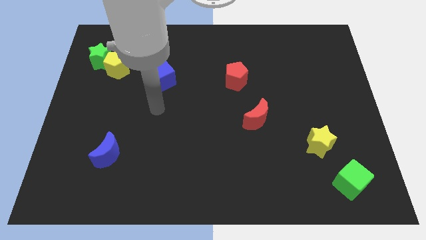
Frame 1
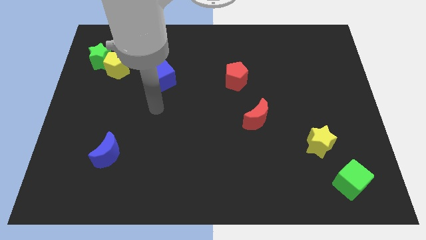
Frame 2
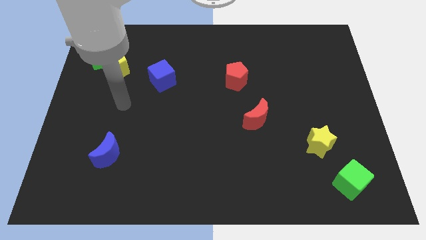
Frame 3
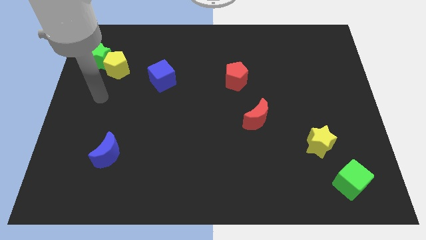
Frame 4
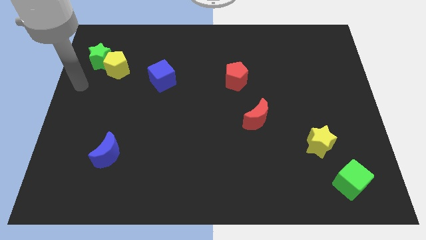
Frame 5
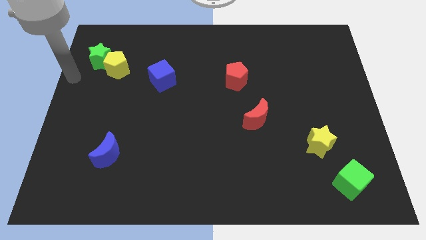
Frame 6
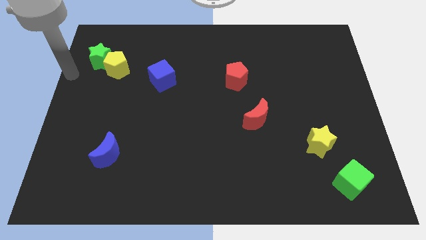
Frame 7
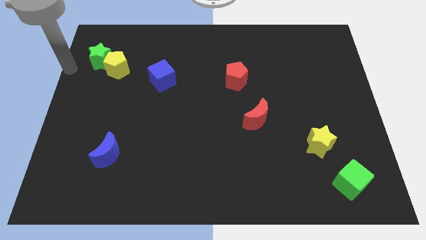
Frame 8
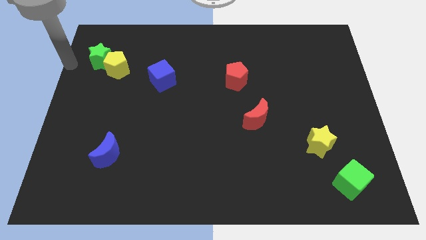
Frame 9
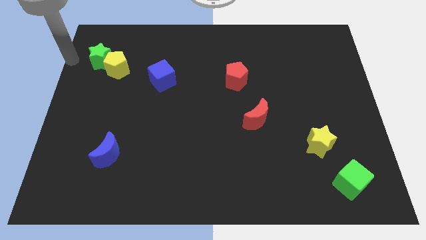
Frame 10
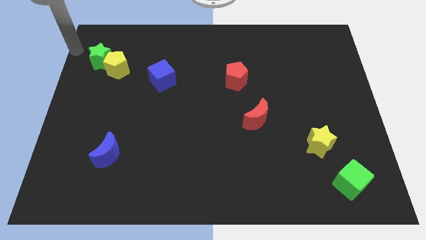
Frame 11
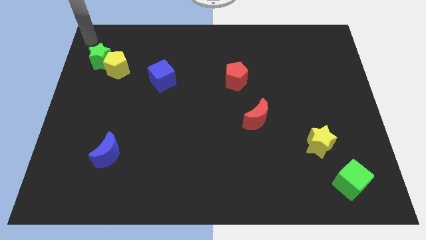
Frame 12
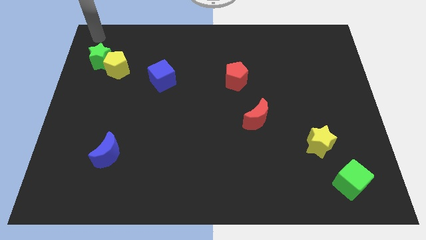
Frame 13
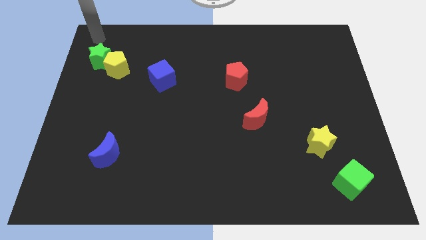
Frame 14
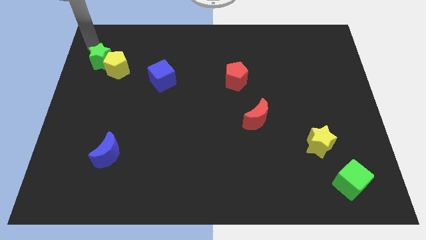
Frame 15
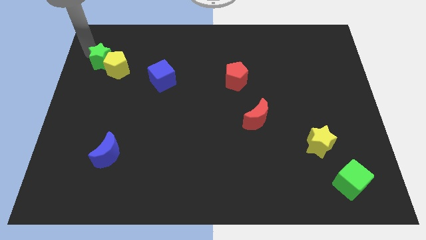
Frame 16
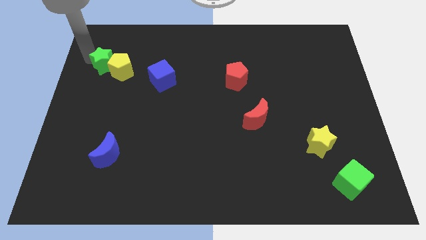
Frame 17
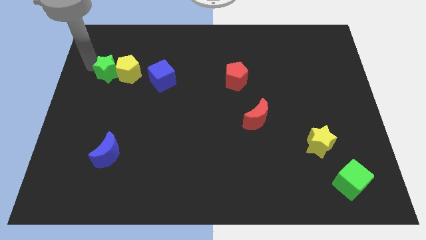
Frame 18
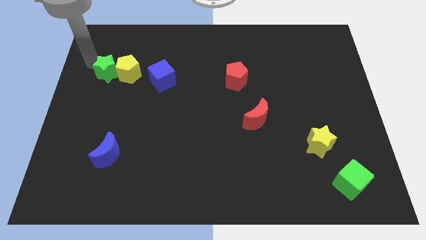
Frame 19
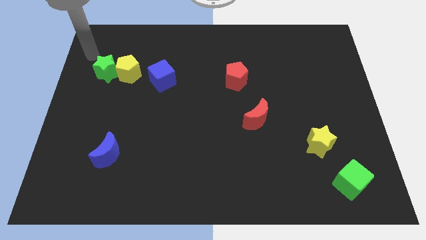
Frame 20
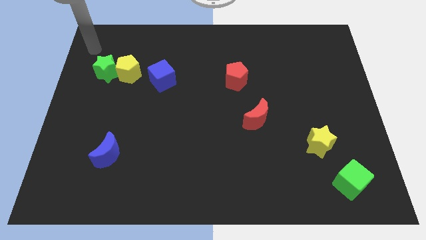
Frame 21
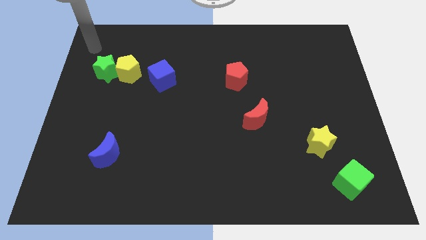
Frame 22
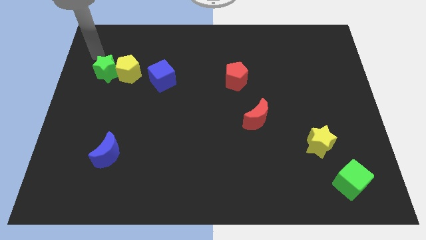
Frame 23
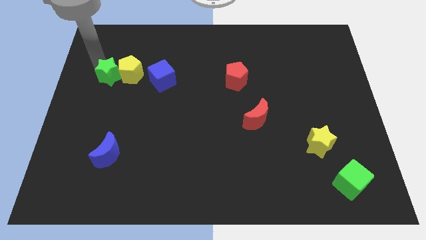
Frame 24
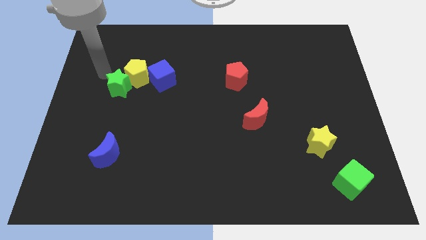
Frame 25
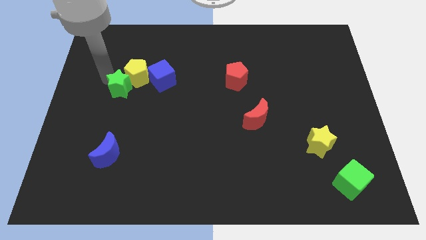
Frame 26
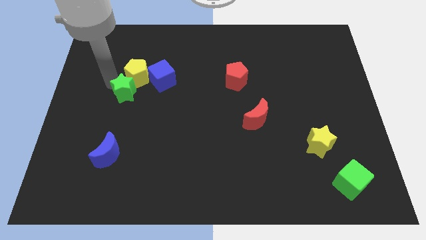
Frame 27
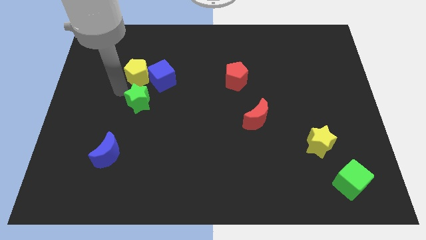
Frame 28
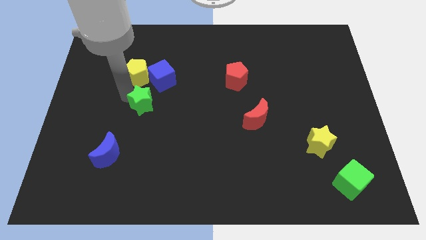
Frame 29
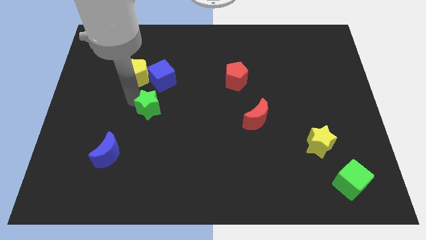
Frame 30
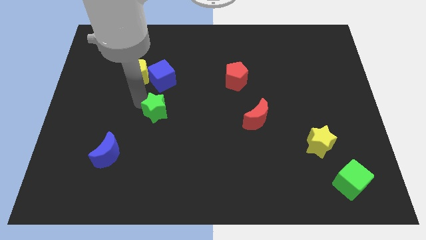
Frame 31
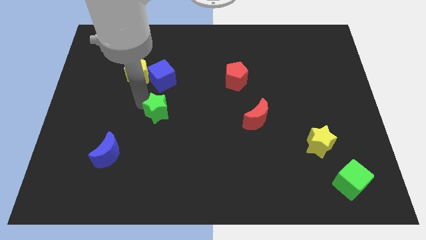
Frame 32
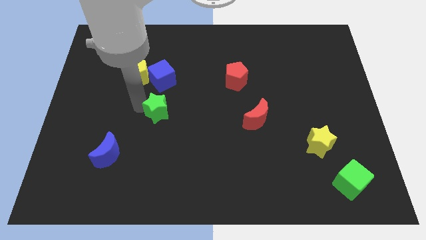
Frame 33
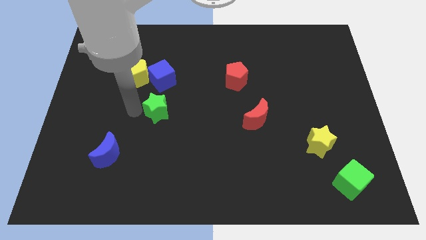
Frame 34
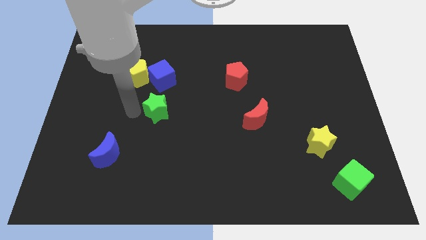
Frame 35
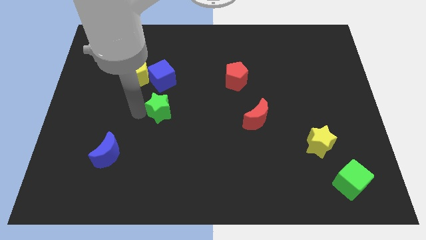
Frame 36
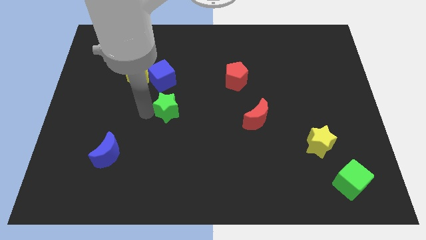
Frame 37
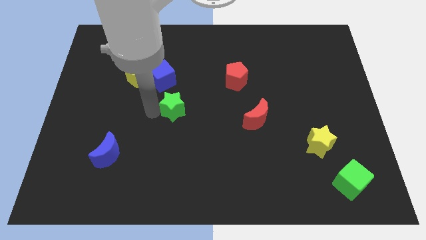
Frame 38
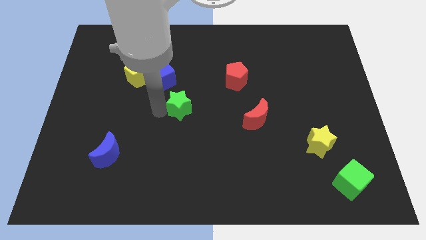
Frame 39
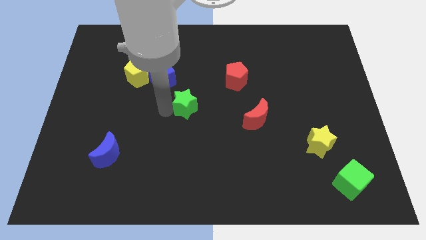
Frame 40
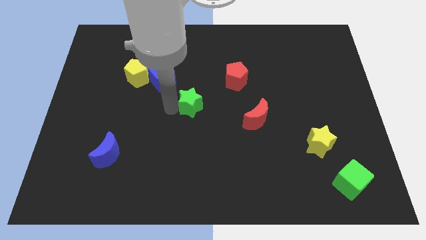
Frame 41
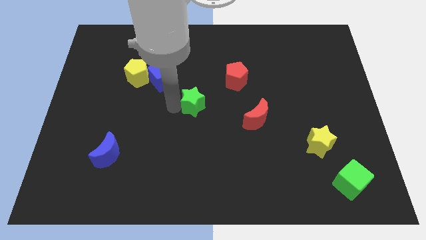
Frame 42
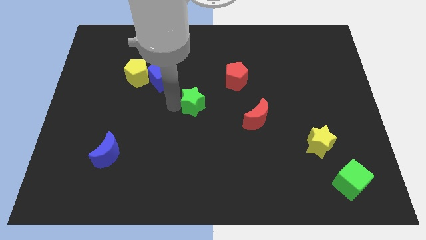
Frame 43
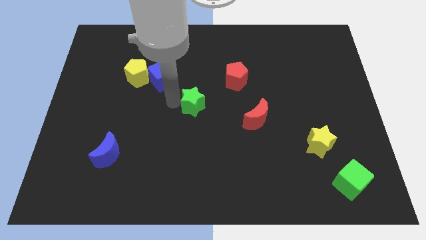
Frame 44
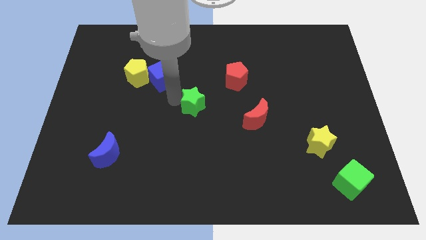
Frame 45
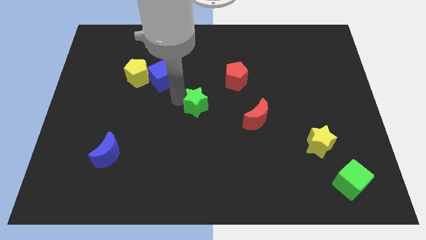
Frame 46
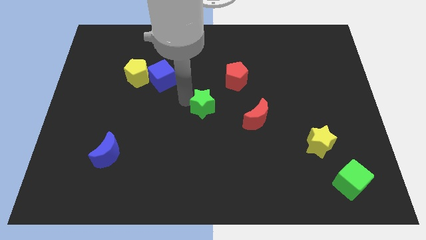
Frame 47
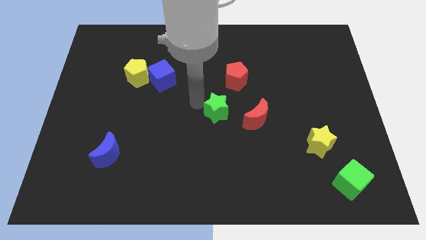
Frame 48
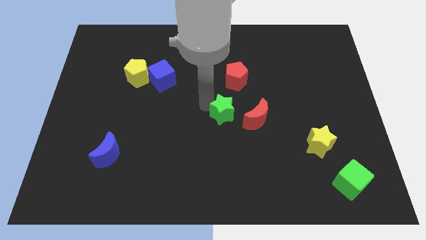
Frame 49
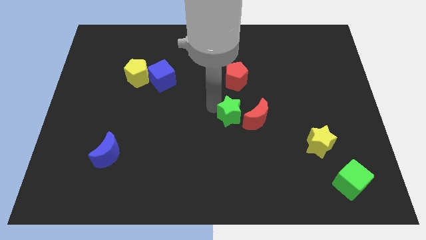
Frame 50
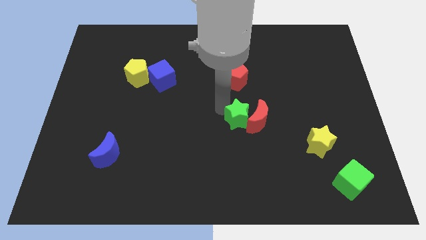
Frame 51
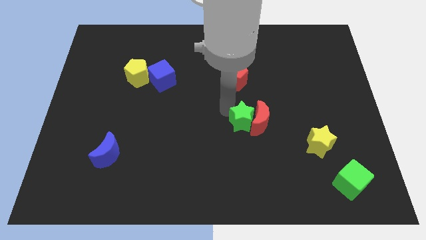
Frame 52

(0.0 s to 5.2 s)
move the green star to the red moon

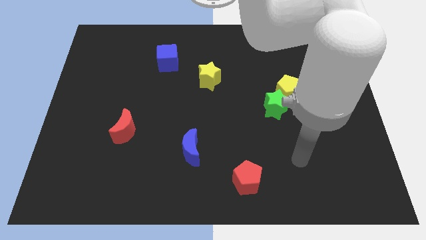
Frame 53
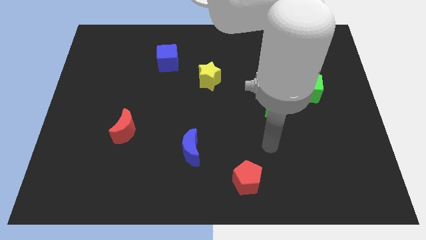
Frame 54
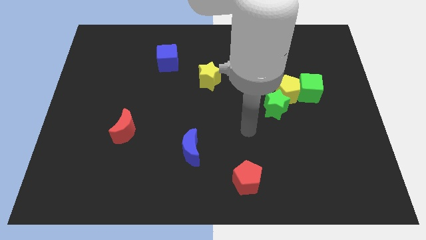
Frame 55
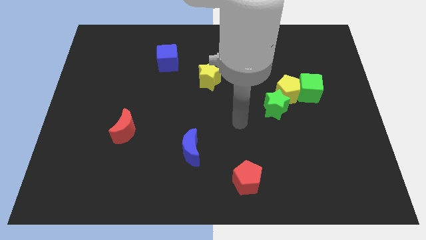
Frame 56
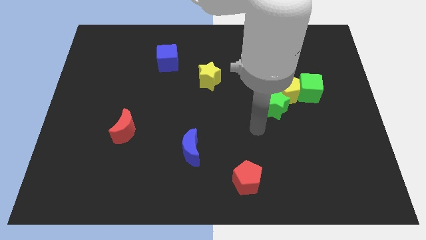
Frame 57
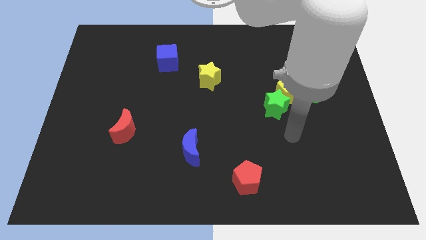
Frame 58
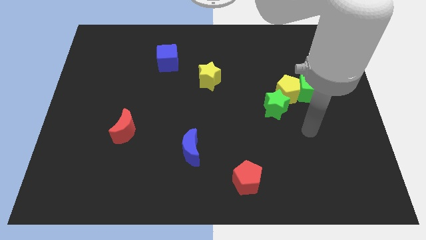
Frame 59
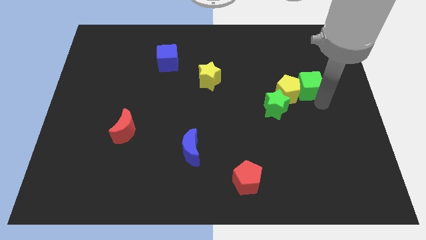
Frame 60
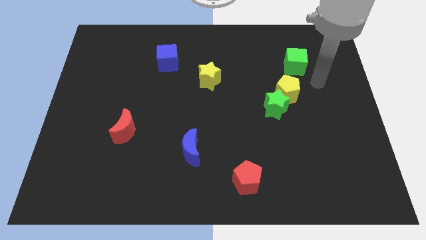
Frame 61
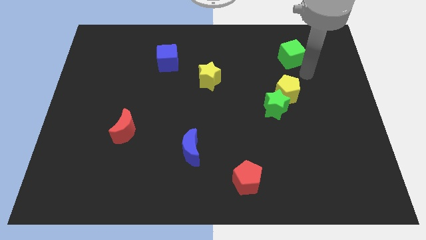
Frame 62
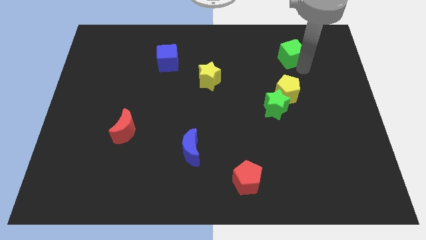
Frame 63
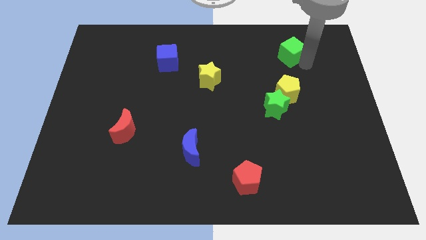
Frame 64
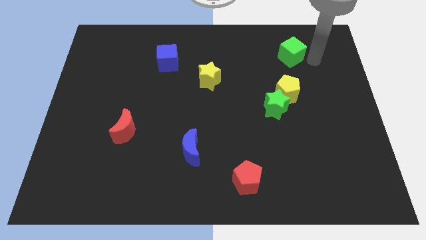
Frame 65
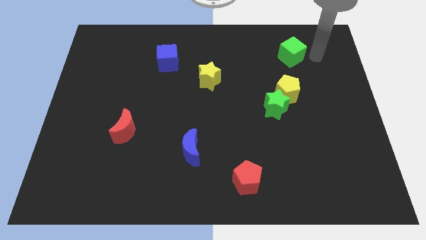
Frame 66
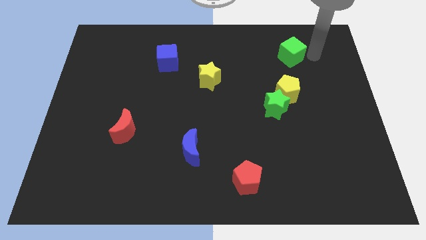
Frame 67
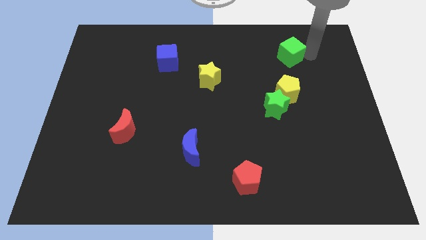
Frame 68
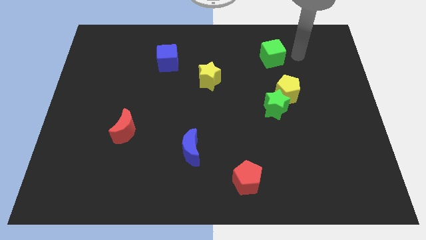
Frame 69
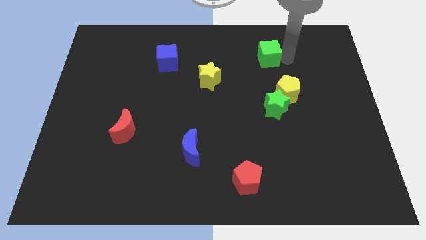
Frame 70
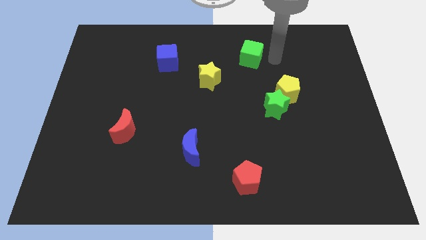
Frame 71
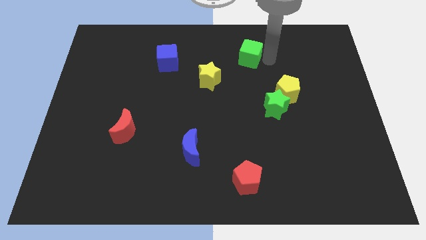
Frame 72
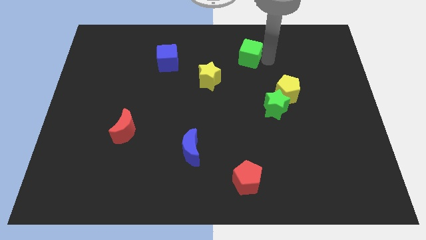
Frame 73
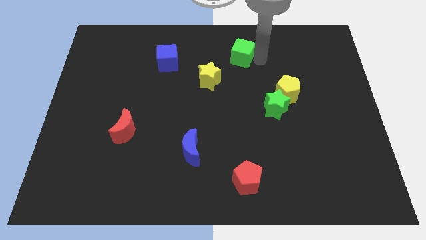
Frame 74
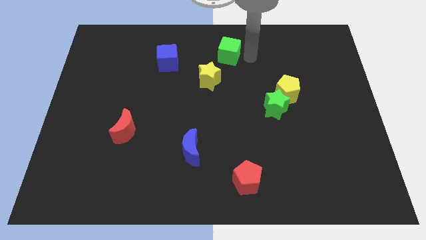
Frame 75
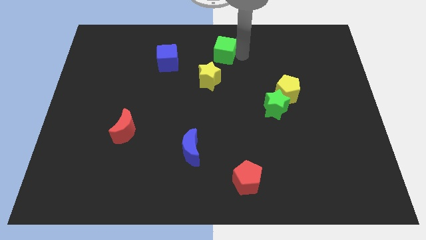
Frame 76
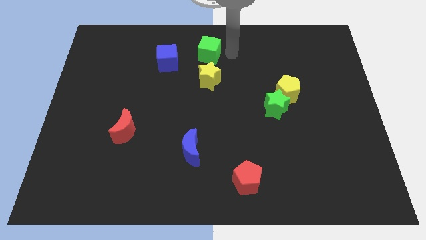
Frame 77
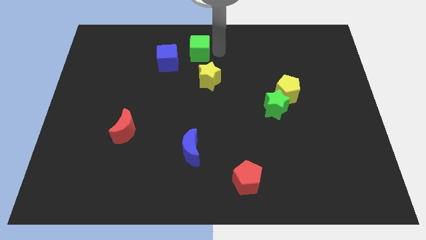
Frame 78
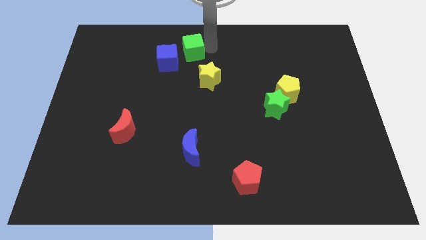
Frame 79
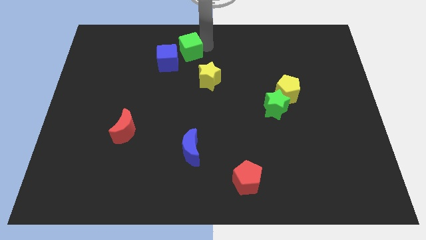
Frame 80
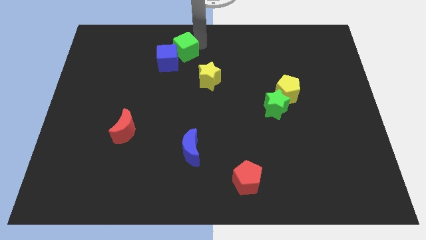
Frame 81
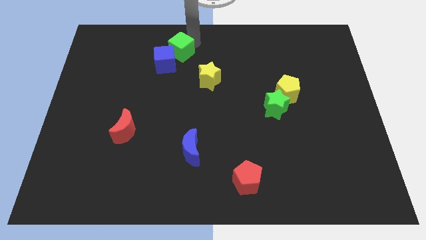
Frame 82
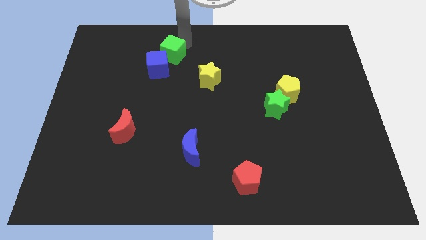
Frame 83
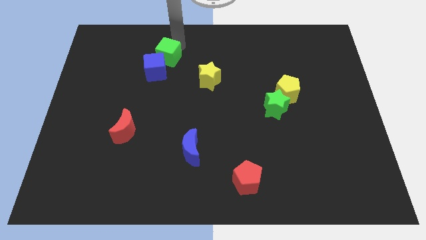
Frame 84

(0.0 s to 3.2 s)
put the green cube to the blue cube

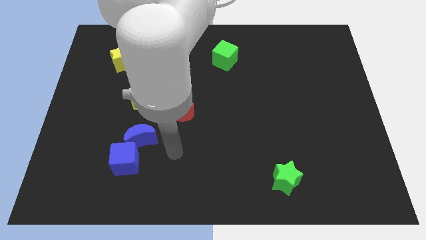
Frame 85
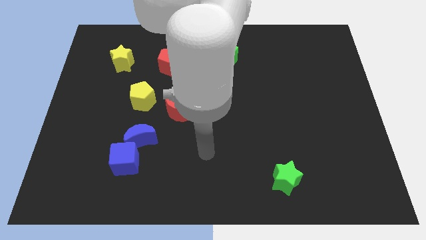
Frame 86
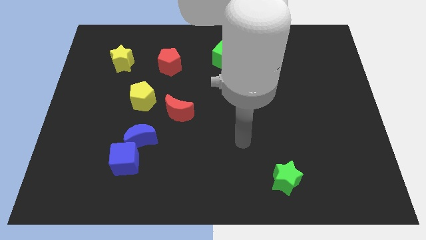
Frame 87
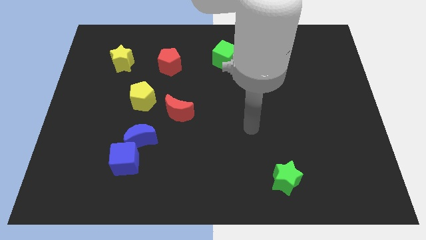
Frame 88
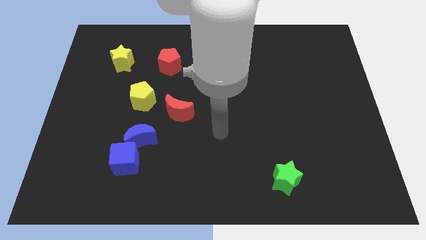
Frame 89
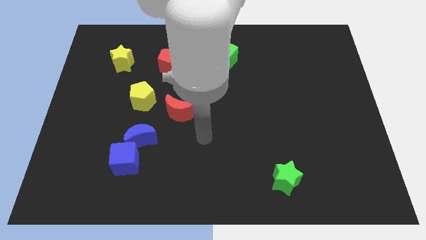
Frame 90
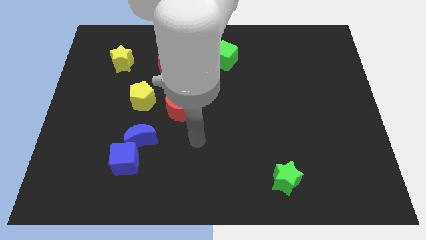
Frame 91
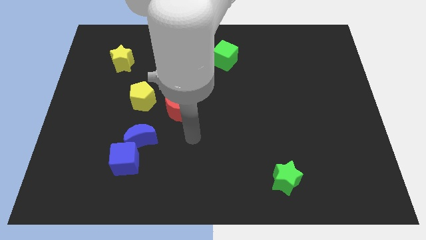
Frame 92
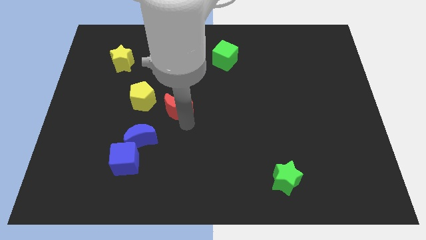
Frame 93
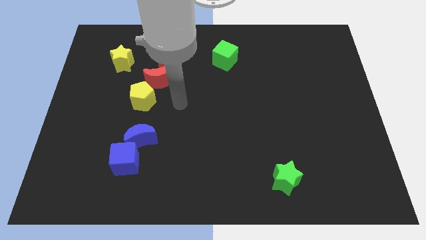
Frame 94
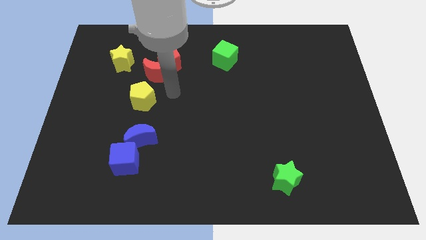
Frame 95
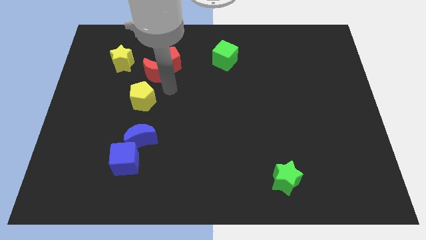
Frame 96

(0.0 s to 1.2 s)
push the red moon next to the red pentagon
